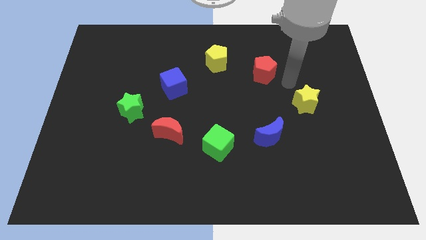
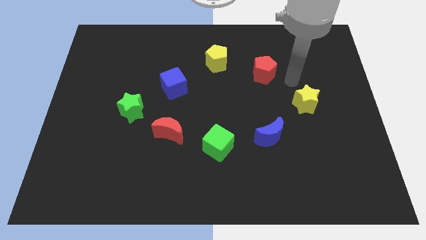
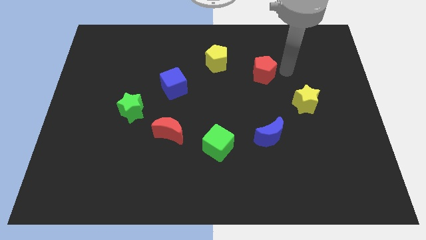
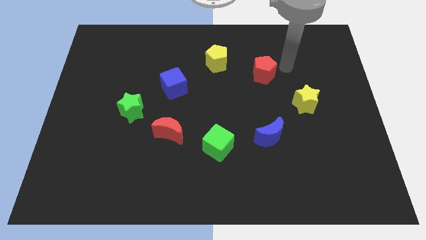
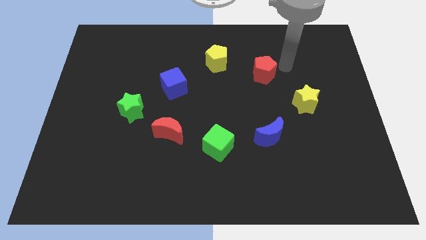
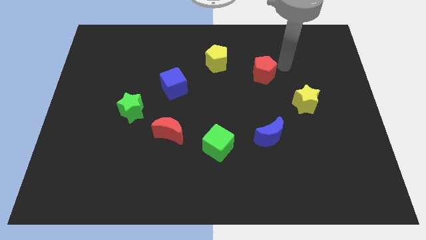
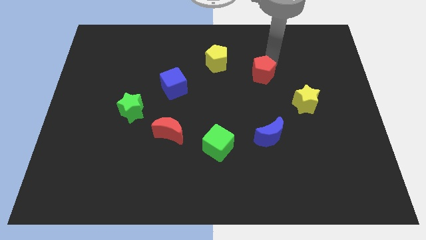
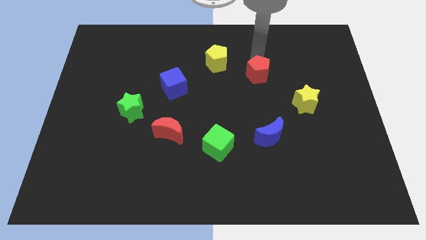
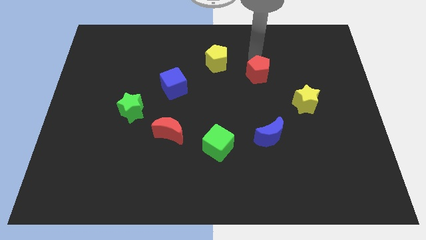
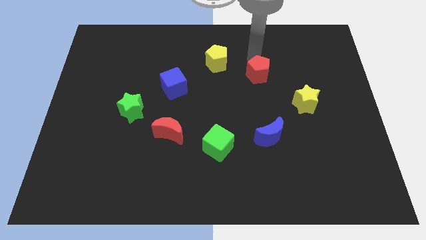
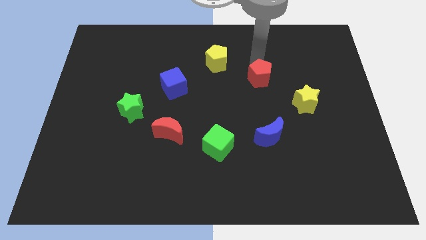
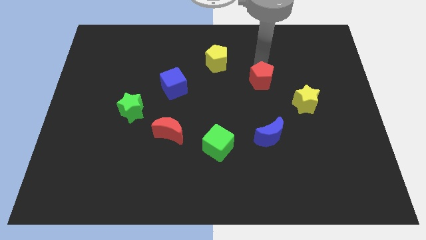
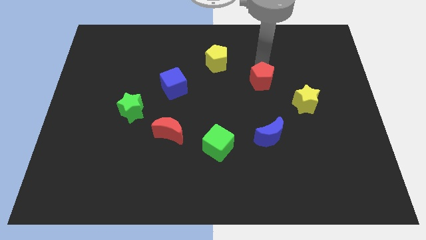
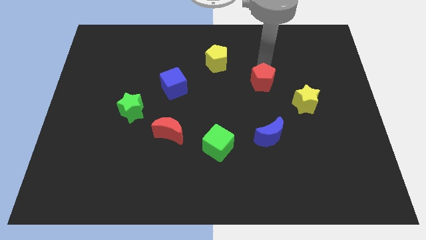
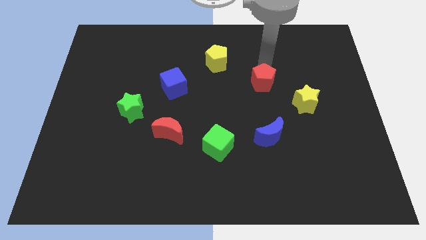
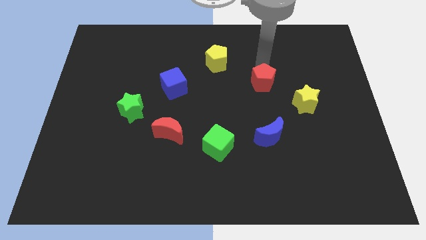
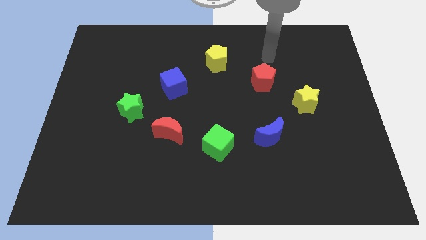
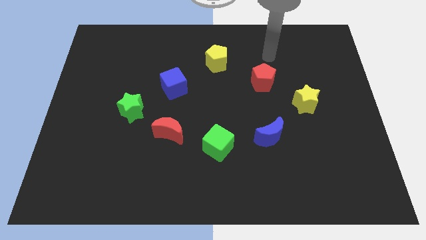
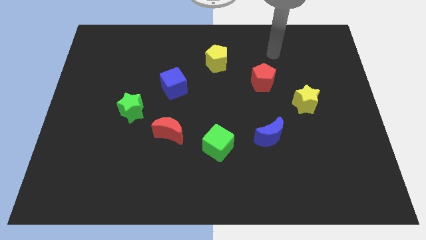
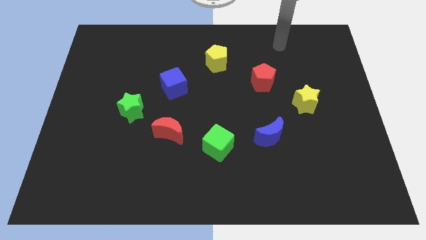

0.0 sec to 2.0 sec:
move the red pentagon downwards

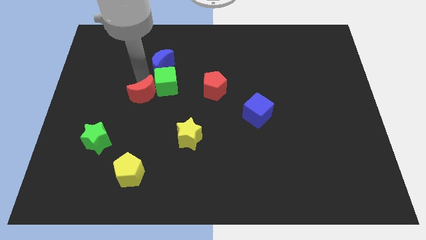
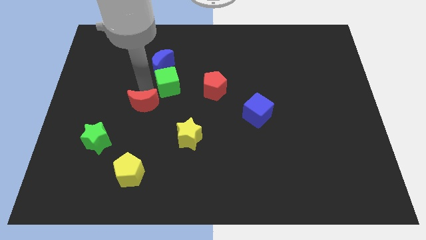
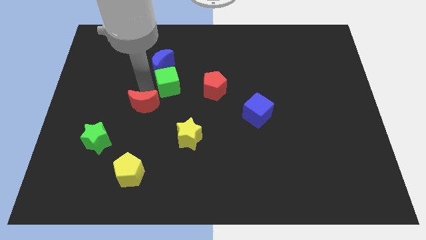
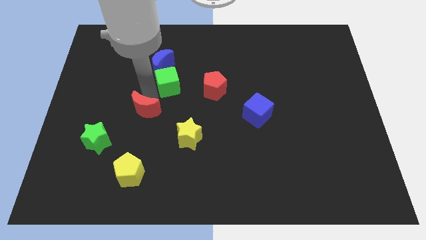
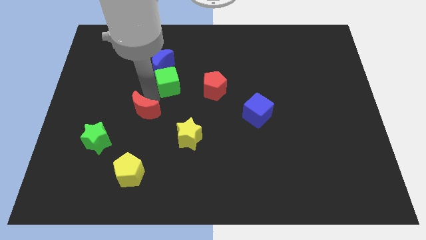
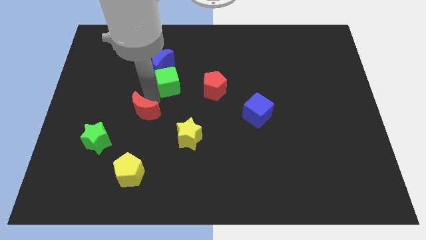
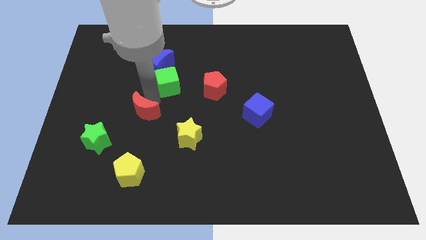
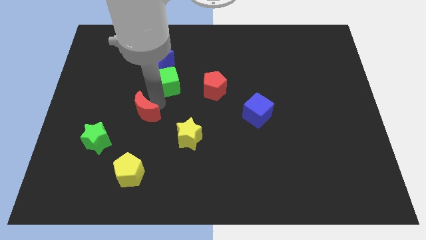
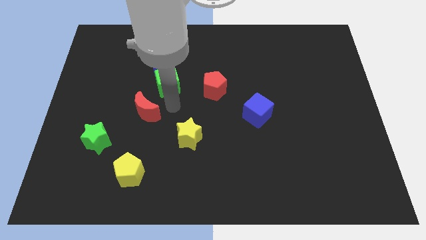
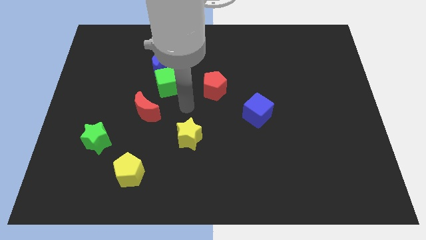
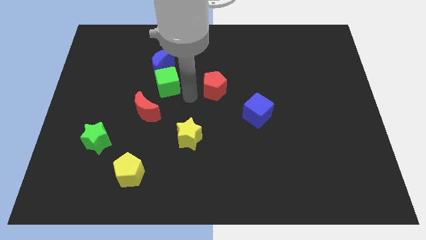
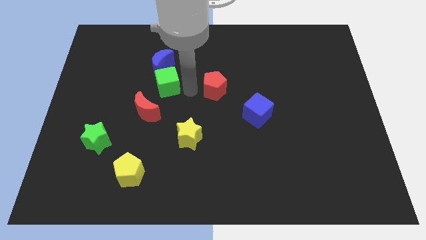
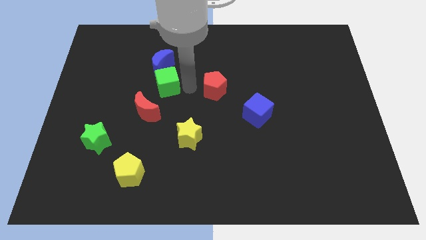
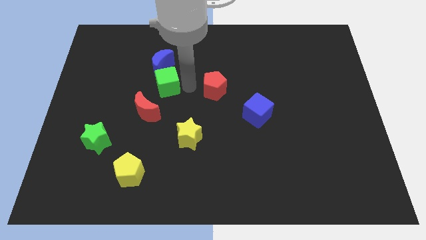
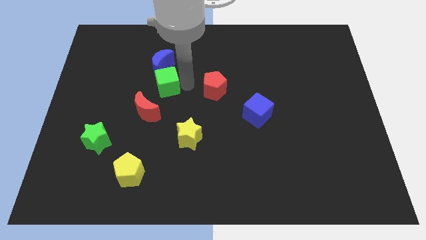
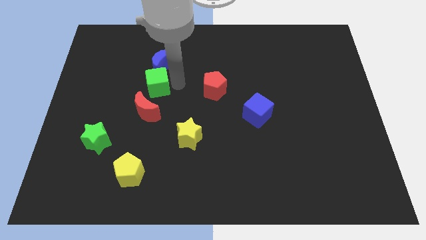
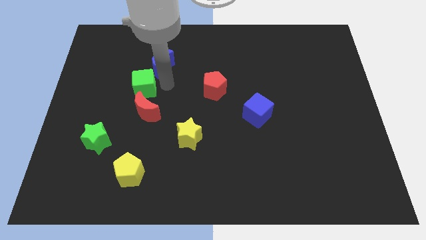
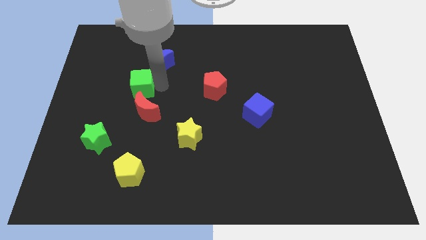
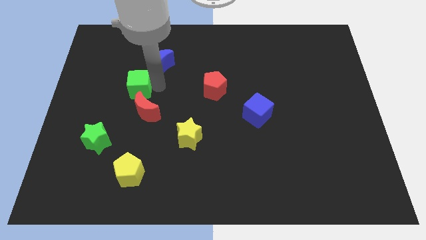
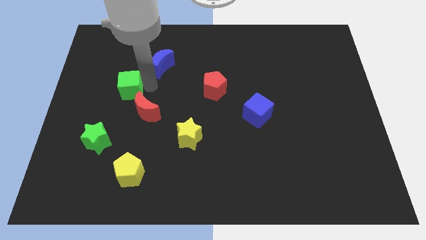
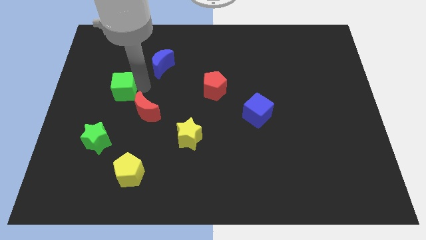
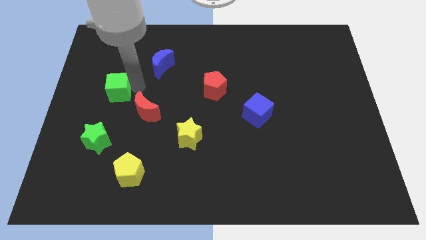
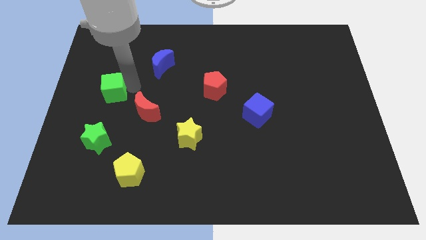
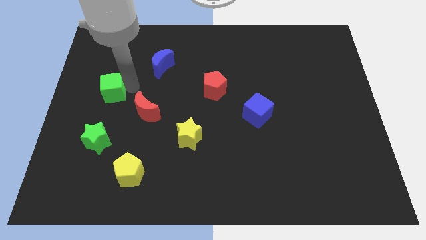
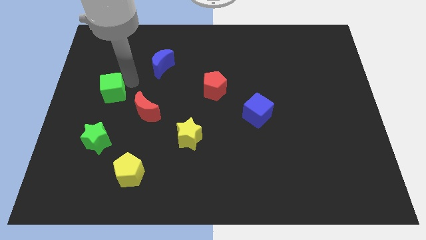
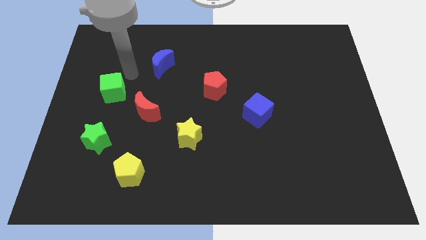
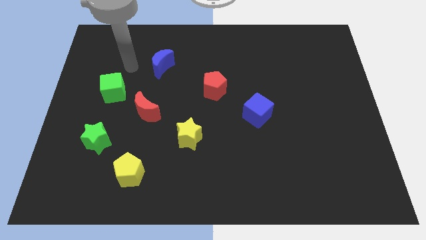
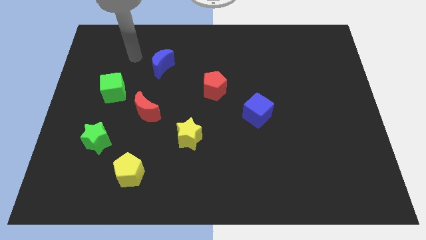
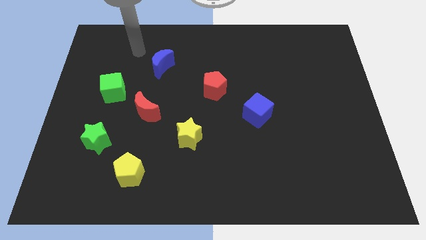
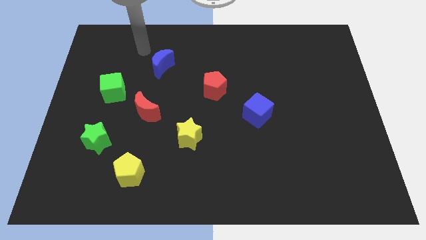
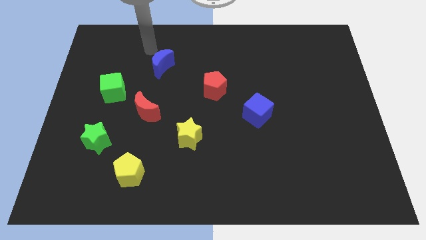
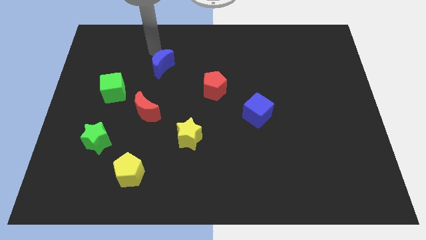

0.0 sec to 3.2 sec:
push the green cube to the top left side of the red moon

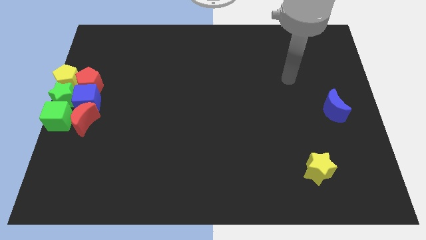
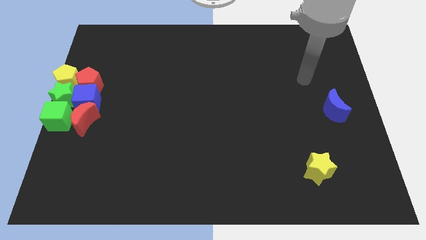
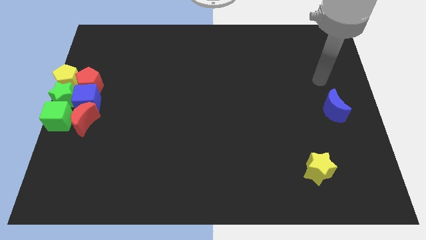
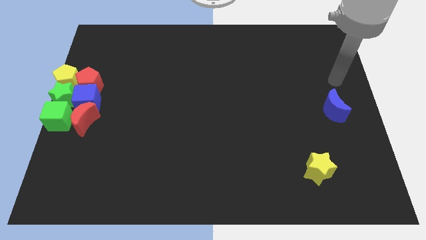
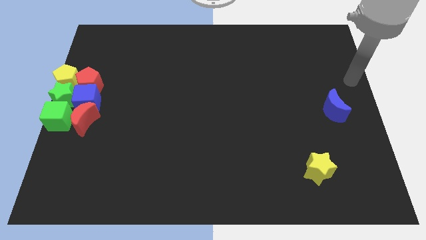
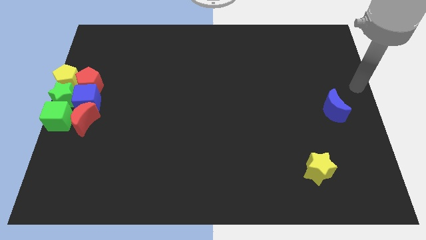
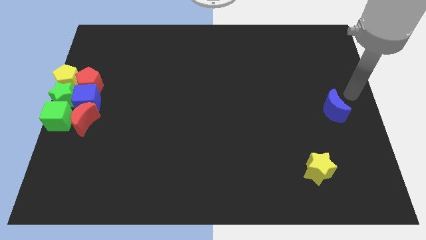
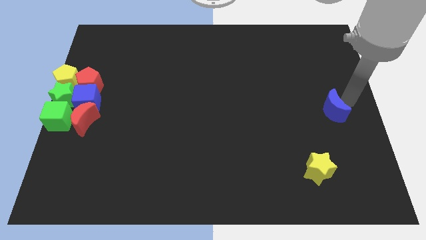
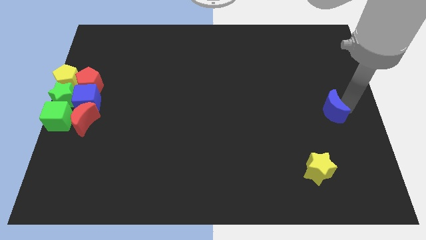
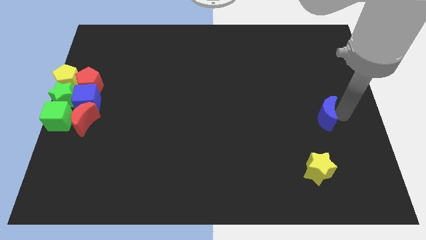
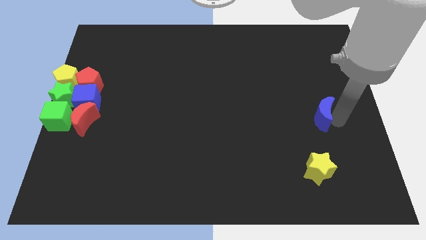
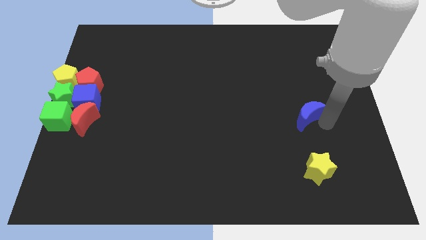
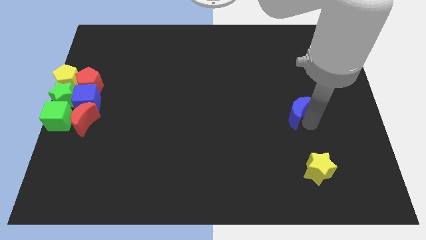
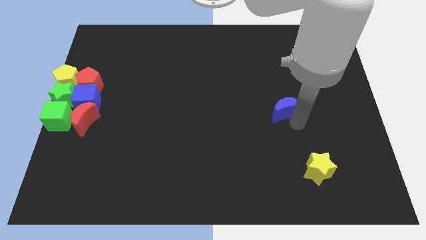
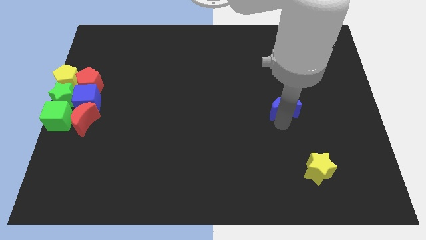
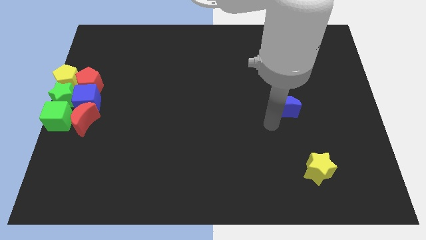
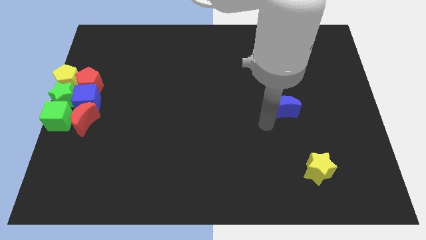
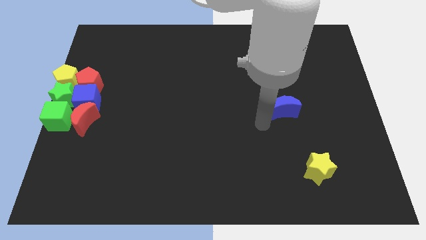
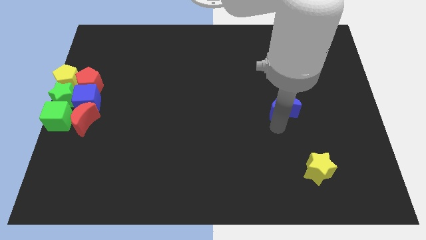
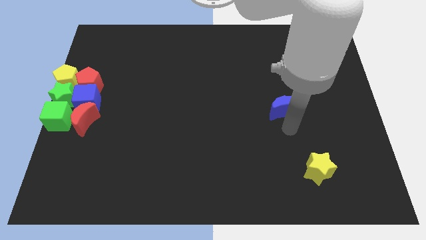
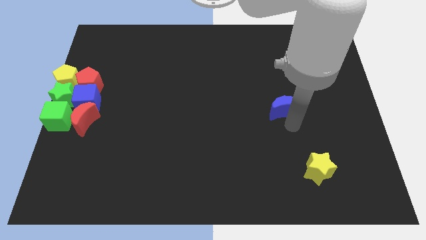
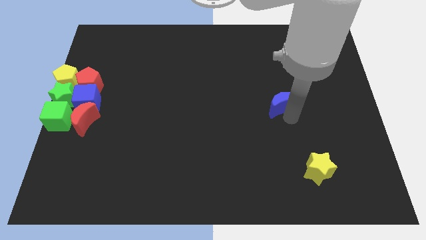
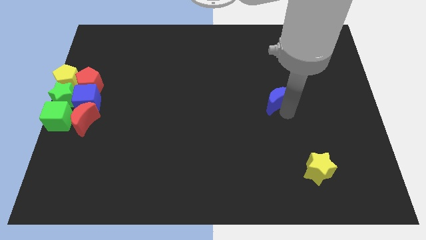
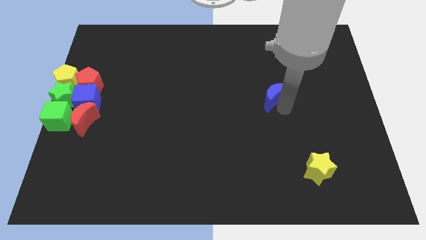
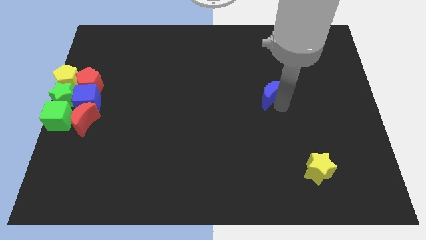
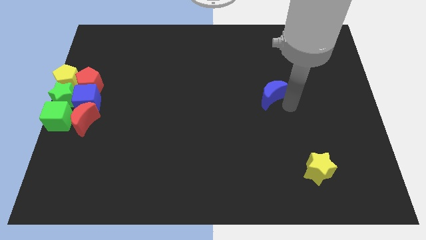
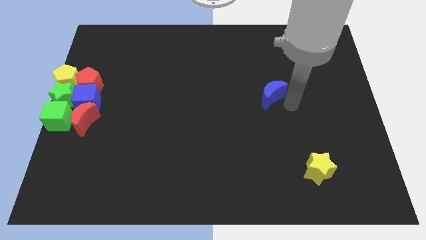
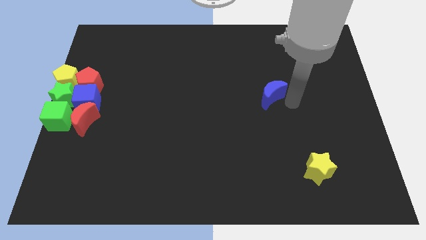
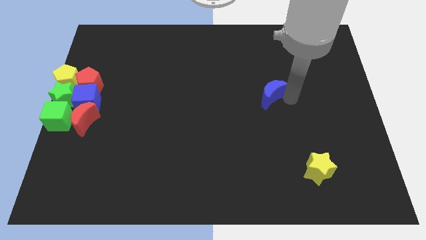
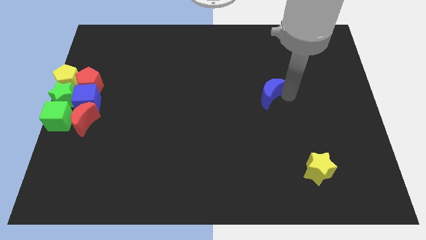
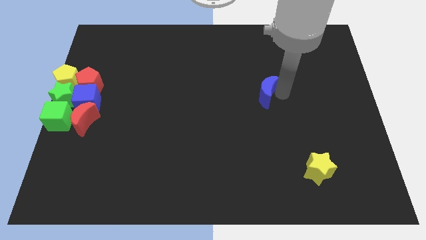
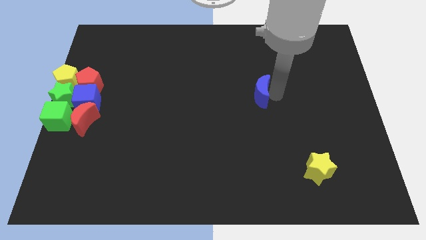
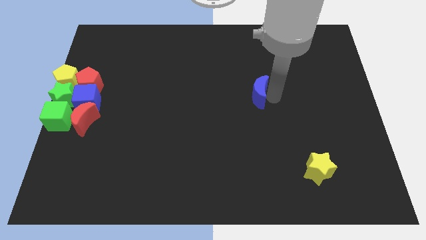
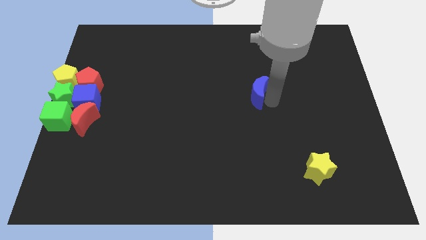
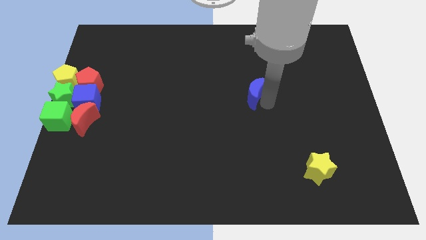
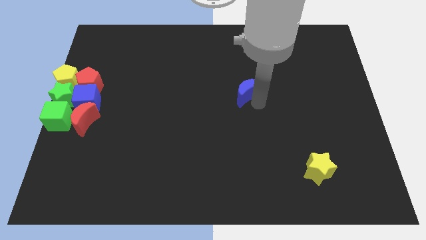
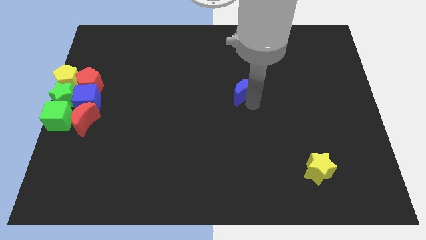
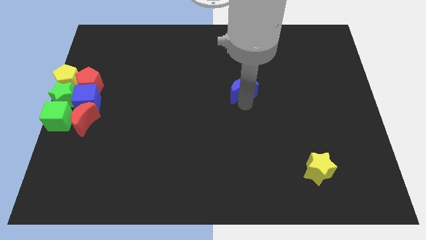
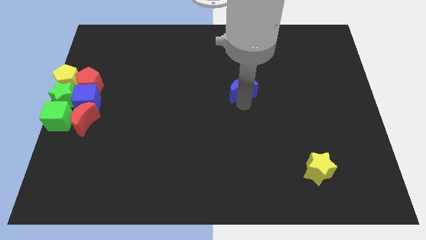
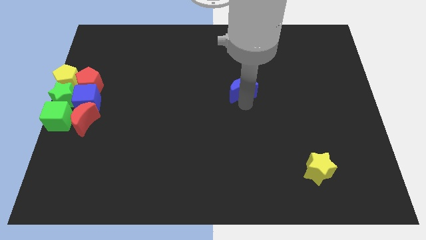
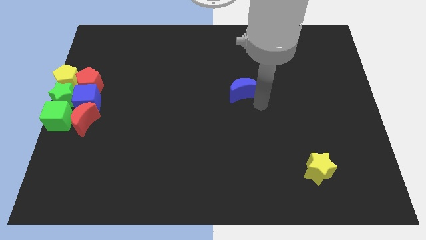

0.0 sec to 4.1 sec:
move the blue moon to the left side of the board
